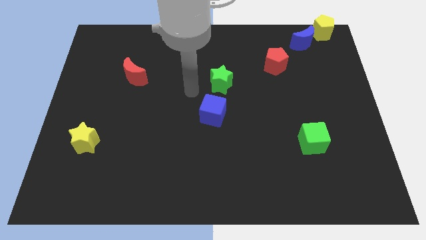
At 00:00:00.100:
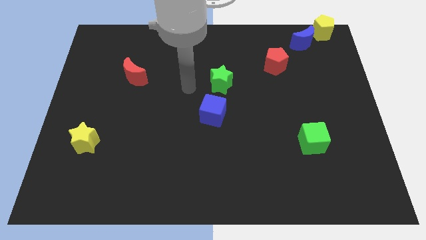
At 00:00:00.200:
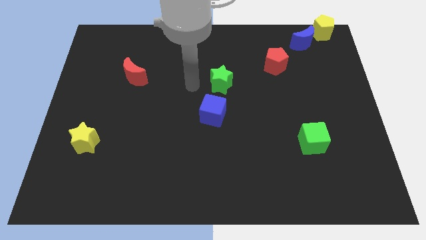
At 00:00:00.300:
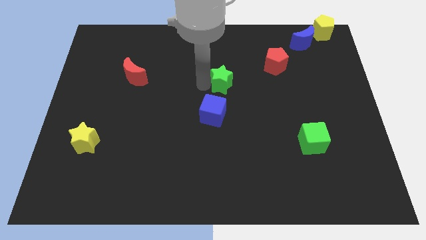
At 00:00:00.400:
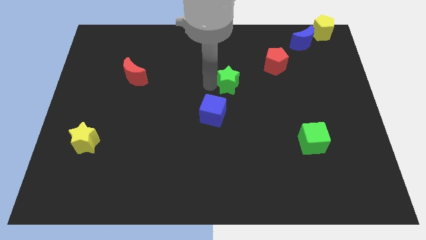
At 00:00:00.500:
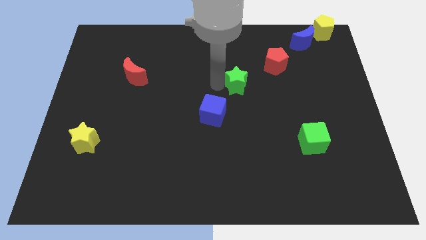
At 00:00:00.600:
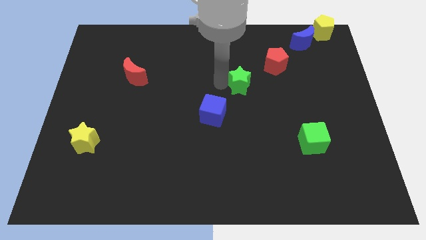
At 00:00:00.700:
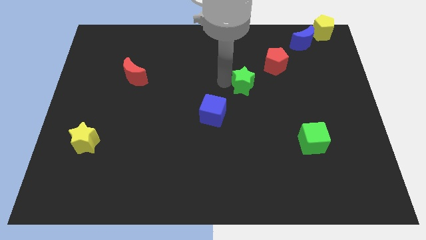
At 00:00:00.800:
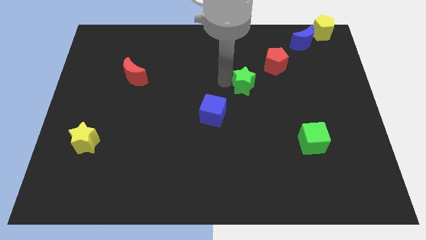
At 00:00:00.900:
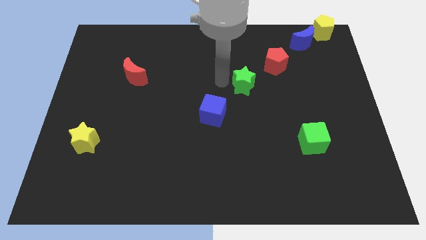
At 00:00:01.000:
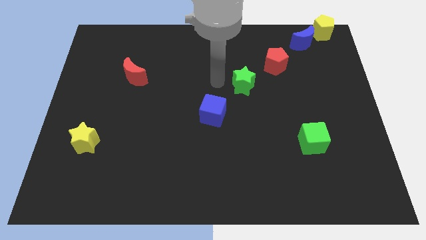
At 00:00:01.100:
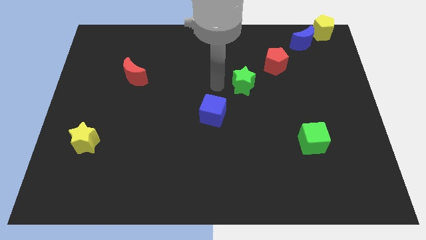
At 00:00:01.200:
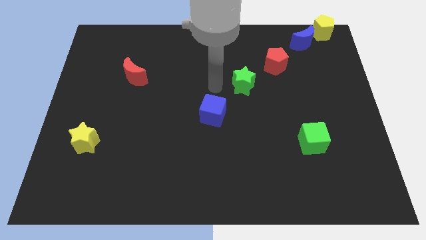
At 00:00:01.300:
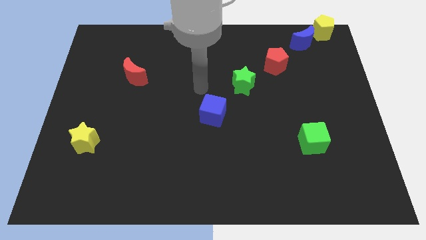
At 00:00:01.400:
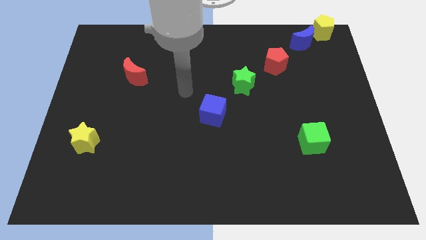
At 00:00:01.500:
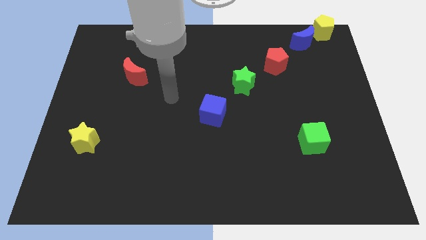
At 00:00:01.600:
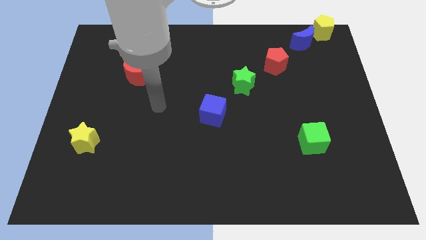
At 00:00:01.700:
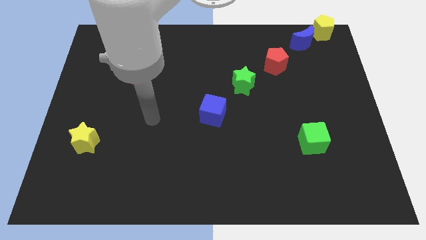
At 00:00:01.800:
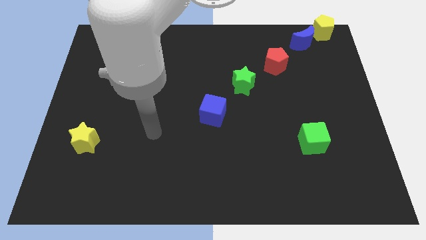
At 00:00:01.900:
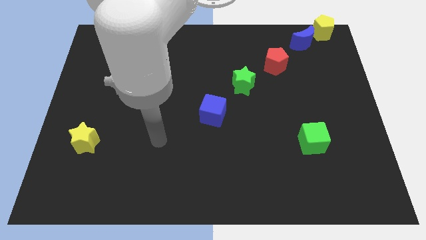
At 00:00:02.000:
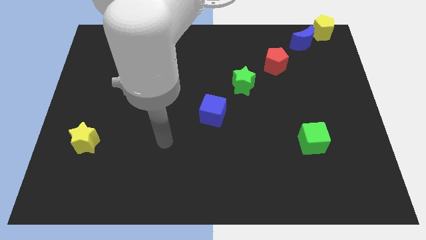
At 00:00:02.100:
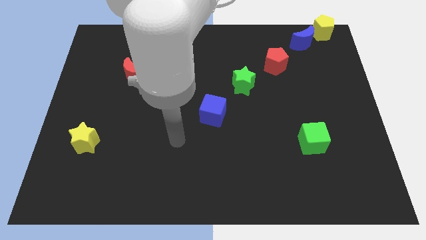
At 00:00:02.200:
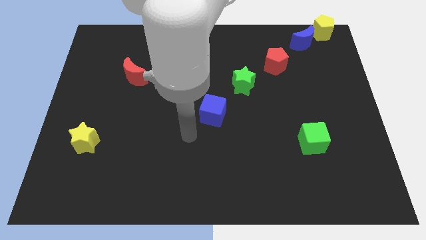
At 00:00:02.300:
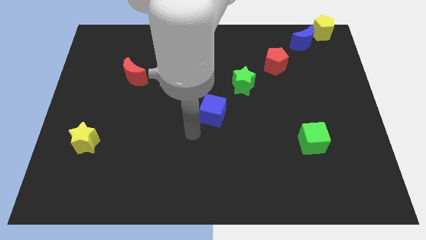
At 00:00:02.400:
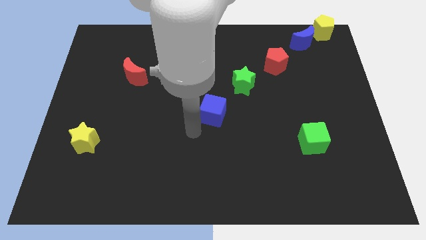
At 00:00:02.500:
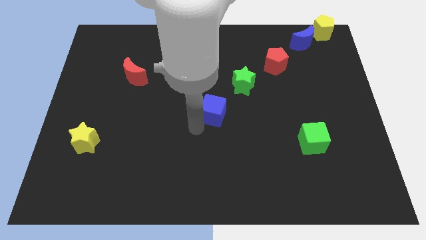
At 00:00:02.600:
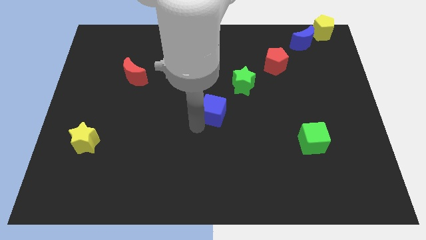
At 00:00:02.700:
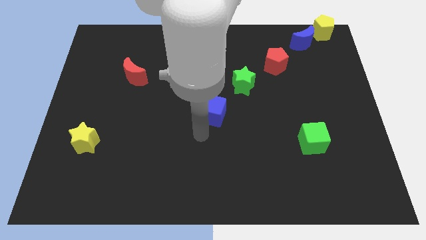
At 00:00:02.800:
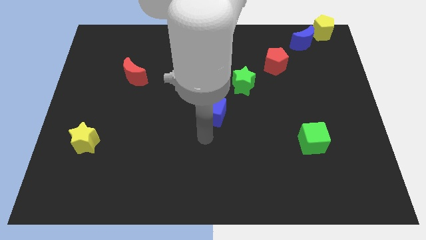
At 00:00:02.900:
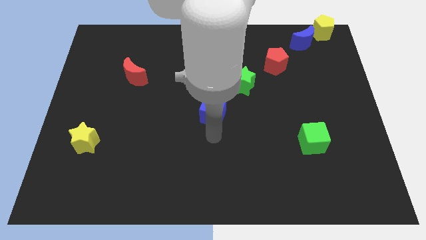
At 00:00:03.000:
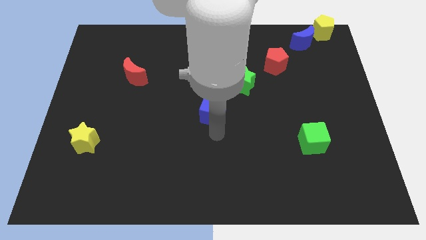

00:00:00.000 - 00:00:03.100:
place the green star diagonally top right to blue cube

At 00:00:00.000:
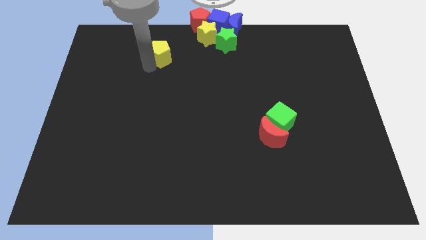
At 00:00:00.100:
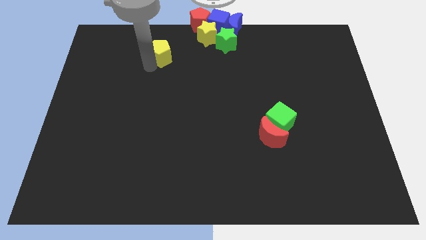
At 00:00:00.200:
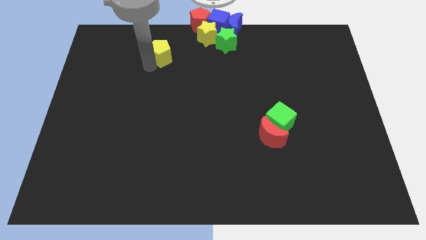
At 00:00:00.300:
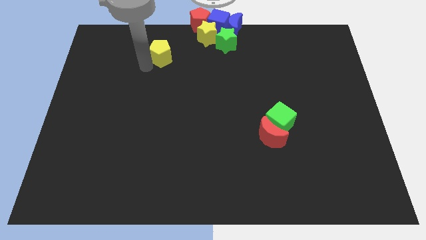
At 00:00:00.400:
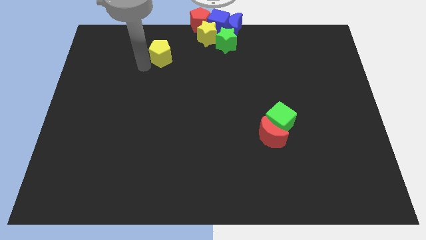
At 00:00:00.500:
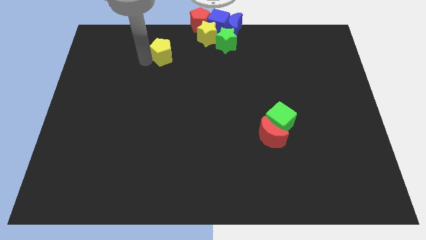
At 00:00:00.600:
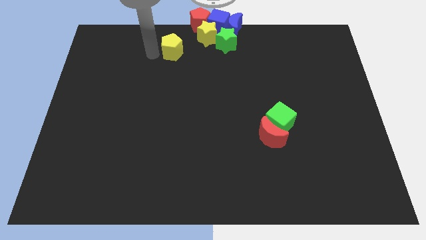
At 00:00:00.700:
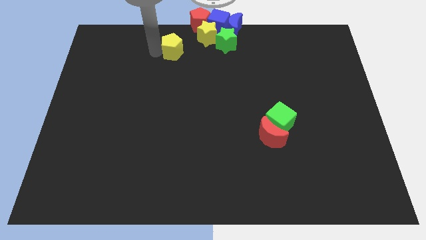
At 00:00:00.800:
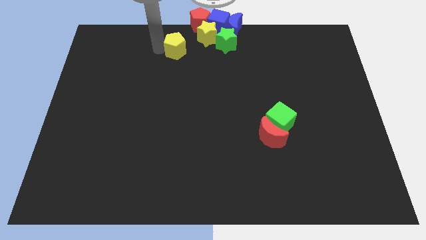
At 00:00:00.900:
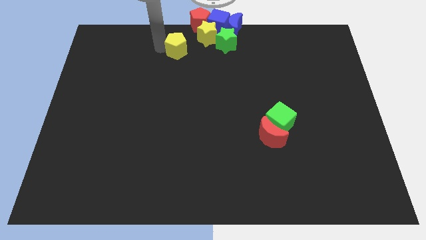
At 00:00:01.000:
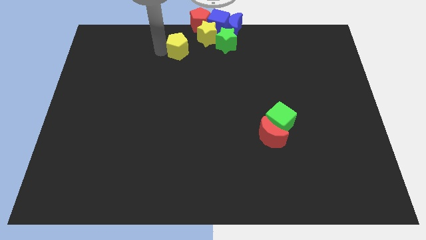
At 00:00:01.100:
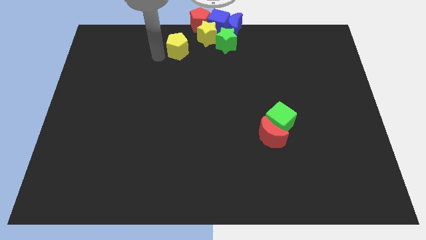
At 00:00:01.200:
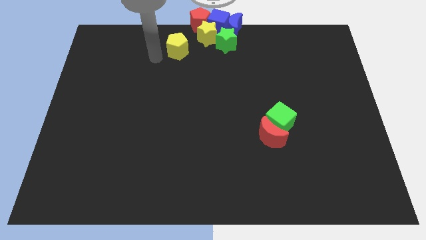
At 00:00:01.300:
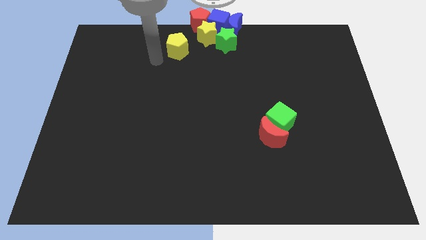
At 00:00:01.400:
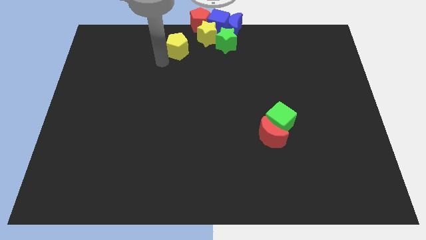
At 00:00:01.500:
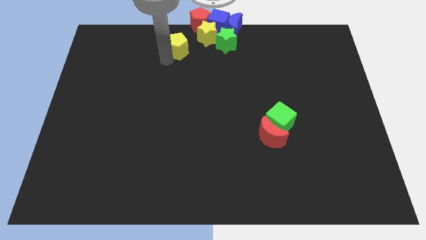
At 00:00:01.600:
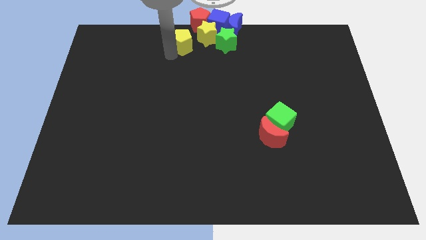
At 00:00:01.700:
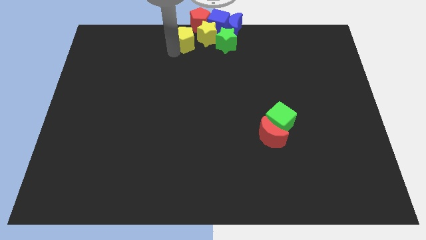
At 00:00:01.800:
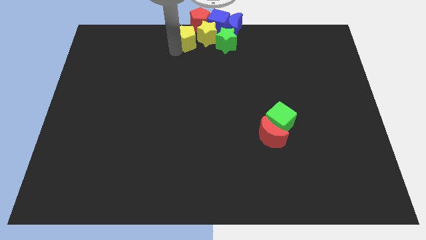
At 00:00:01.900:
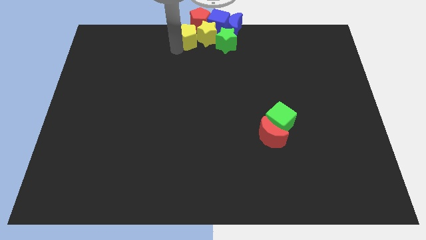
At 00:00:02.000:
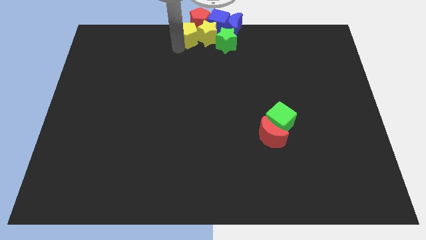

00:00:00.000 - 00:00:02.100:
move the yellow pentagon to the left of the yellow star

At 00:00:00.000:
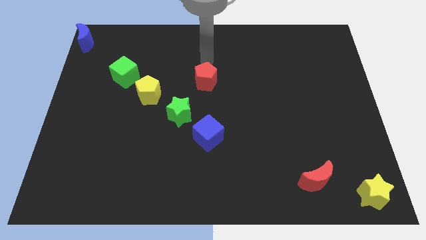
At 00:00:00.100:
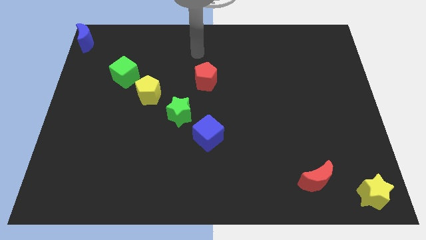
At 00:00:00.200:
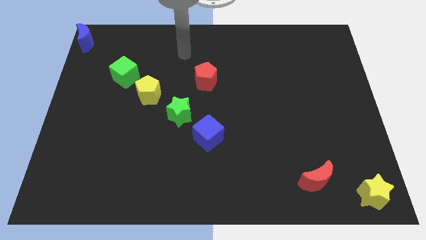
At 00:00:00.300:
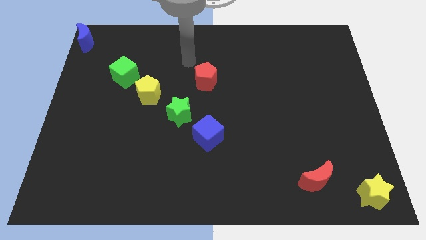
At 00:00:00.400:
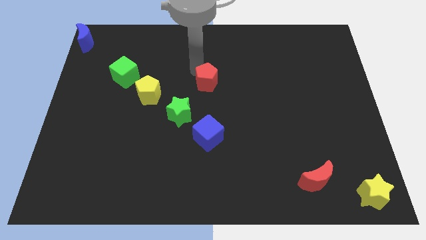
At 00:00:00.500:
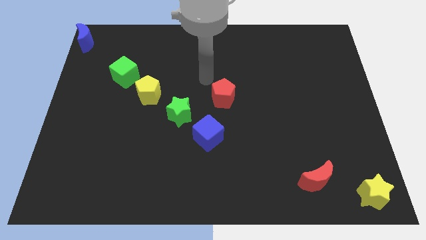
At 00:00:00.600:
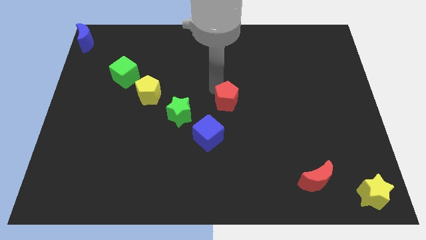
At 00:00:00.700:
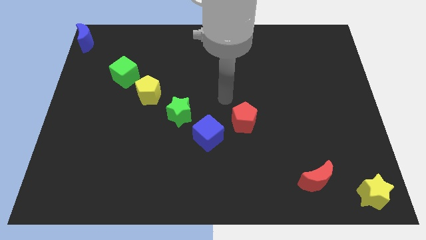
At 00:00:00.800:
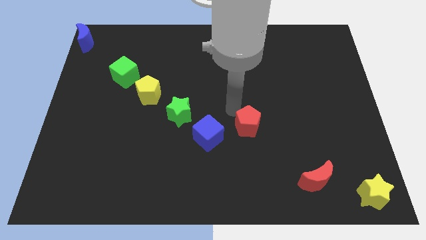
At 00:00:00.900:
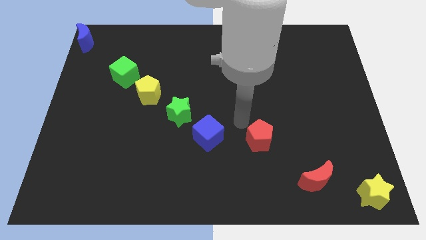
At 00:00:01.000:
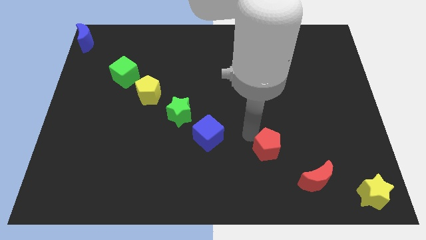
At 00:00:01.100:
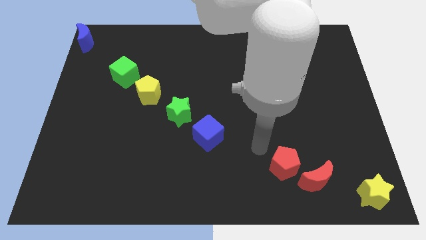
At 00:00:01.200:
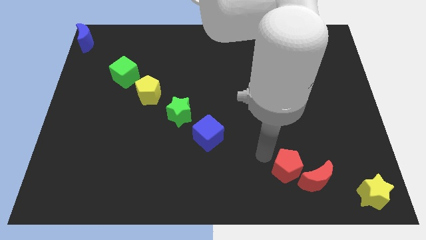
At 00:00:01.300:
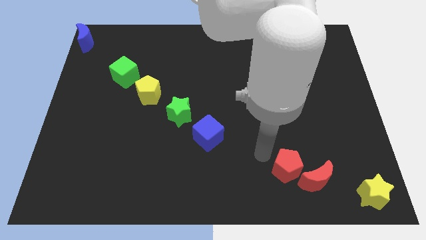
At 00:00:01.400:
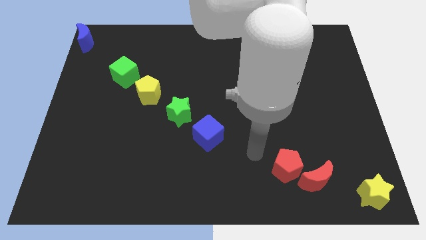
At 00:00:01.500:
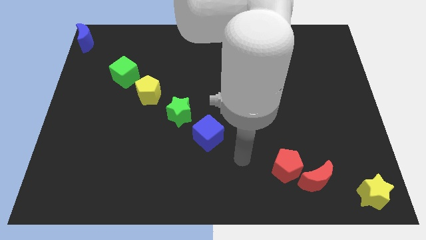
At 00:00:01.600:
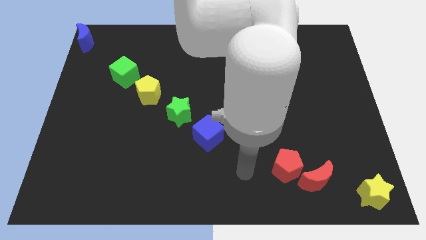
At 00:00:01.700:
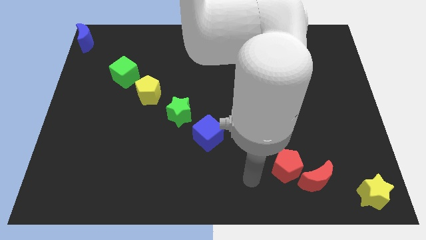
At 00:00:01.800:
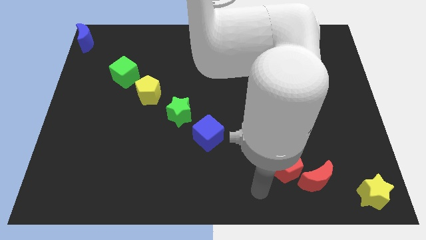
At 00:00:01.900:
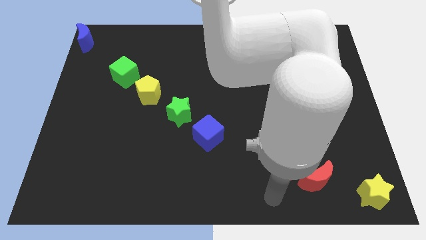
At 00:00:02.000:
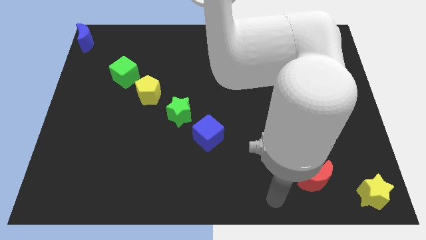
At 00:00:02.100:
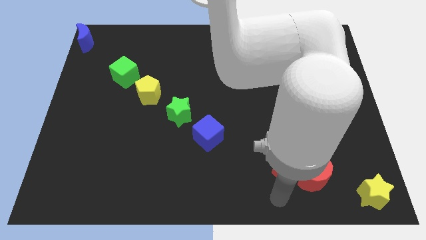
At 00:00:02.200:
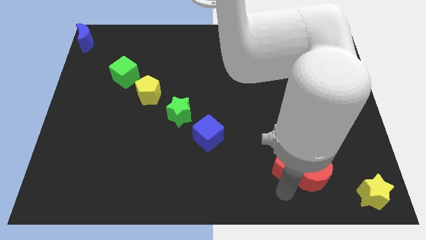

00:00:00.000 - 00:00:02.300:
move red pentagon diagonally to the red moon

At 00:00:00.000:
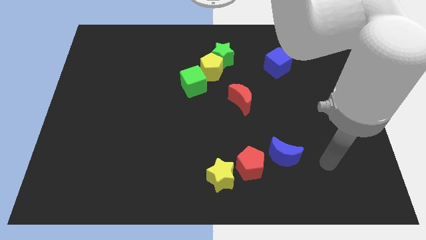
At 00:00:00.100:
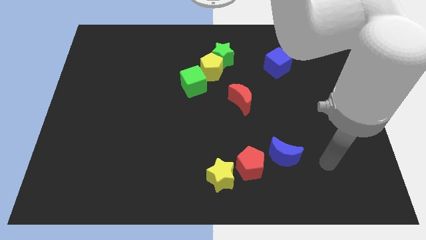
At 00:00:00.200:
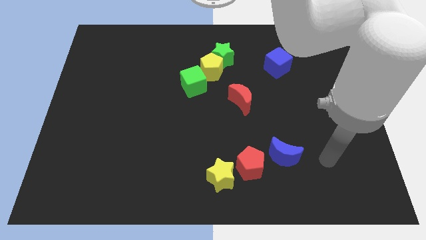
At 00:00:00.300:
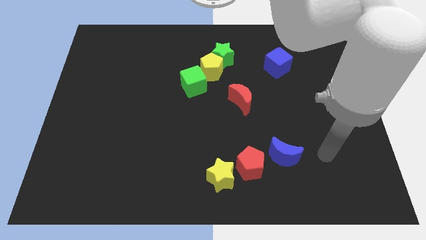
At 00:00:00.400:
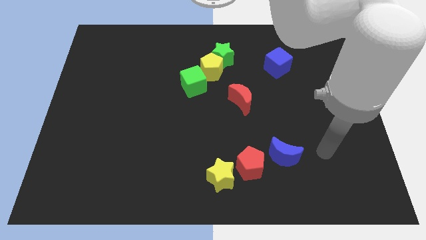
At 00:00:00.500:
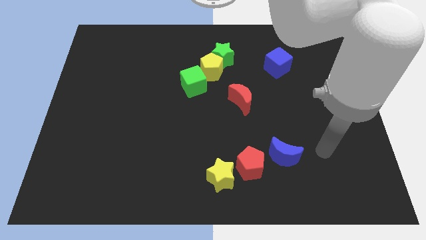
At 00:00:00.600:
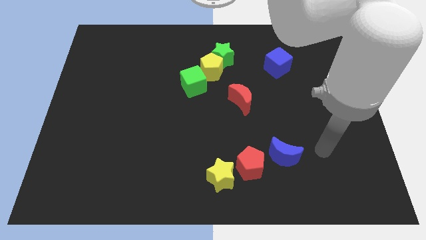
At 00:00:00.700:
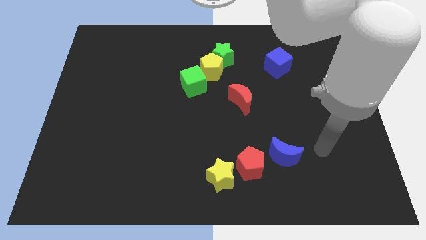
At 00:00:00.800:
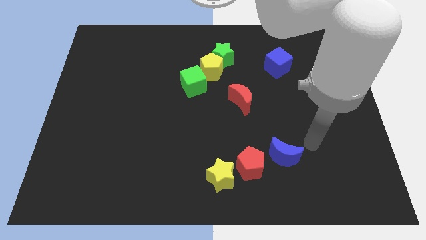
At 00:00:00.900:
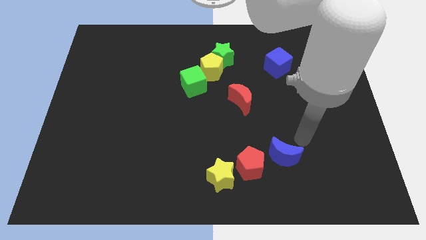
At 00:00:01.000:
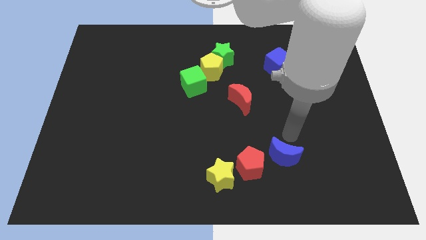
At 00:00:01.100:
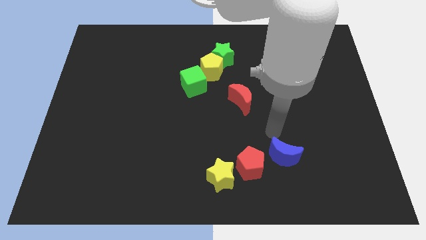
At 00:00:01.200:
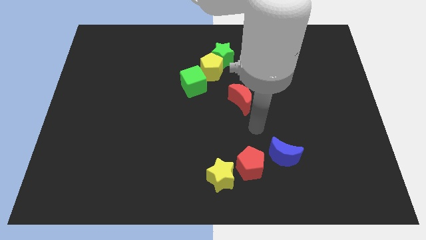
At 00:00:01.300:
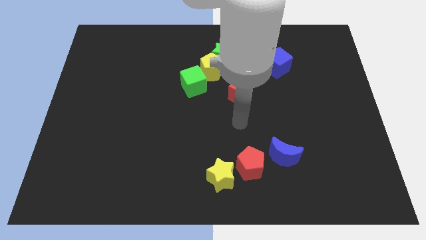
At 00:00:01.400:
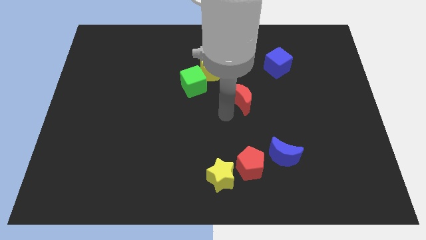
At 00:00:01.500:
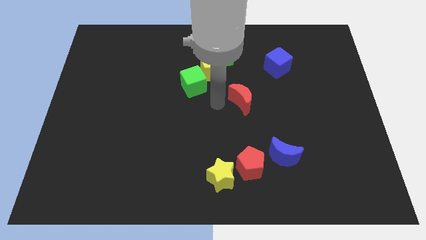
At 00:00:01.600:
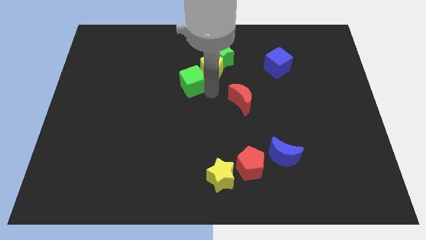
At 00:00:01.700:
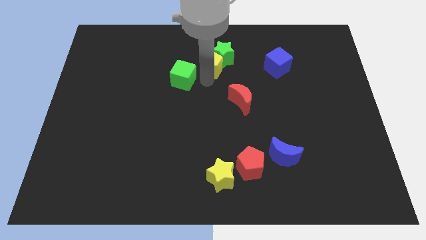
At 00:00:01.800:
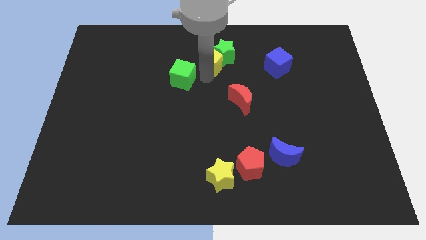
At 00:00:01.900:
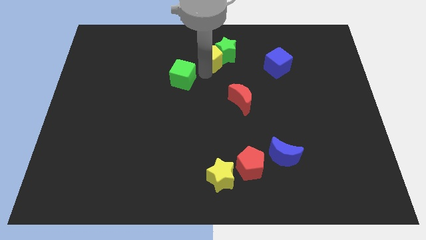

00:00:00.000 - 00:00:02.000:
push the yellow pentagon into the green star
